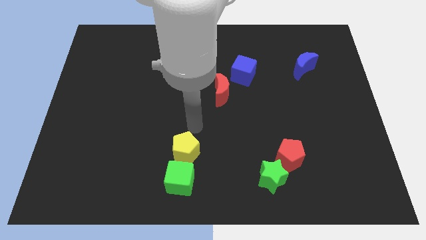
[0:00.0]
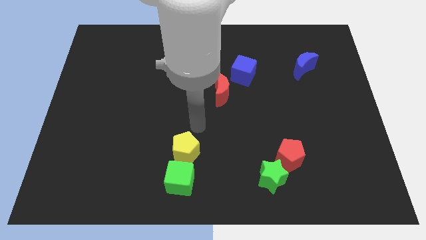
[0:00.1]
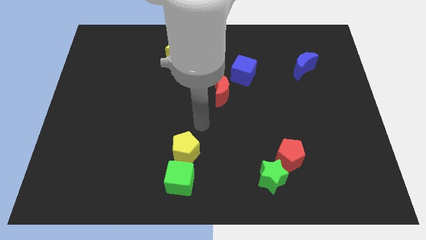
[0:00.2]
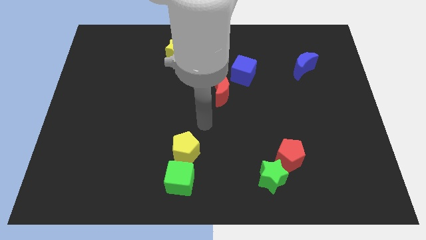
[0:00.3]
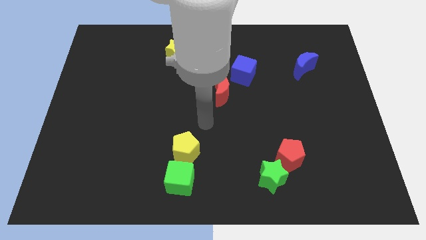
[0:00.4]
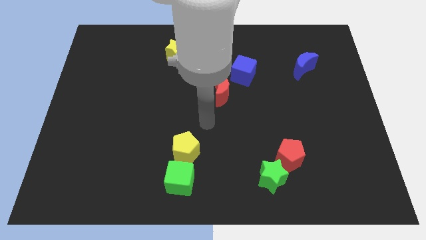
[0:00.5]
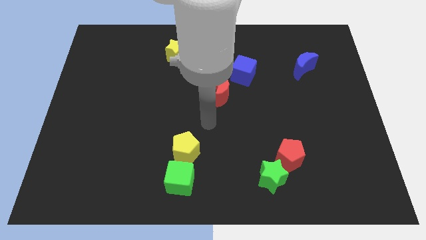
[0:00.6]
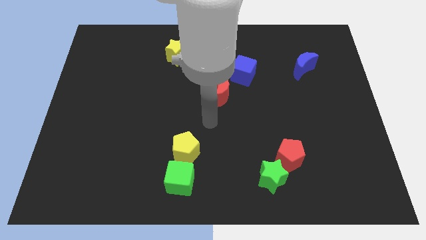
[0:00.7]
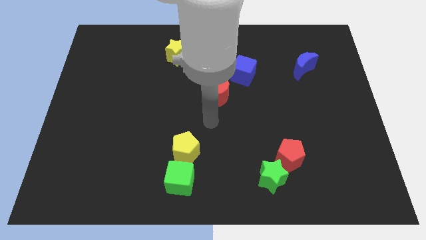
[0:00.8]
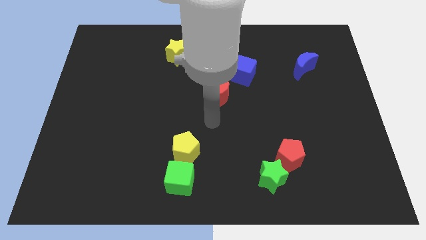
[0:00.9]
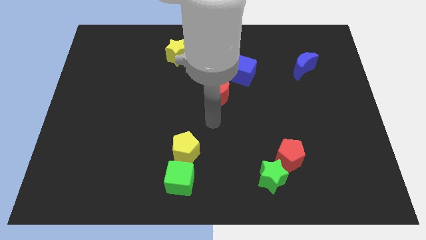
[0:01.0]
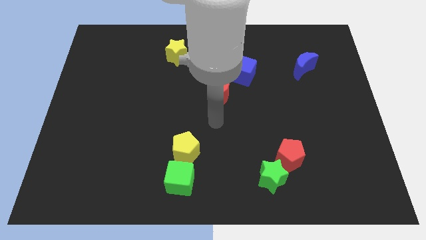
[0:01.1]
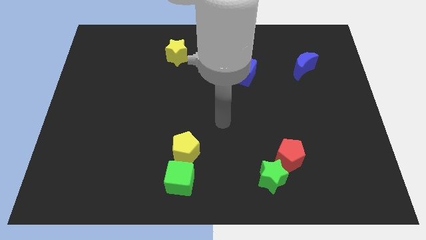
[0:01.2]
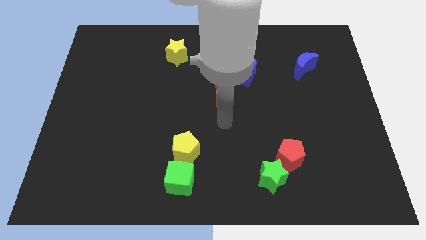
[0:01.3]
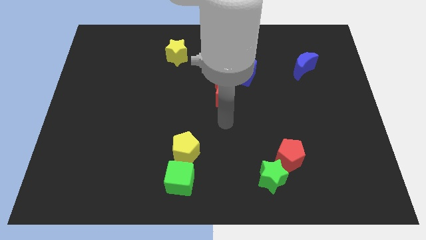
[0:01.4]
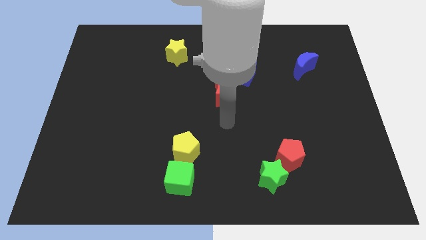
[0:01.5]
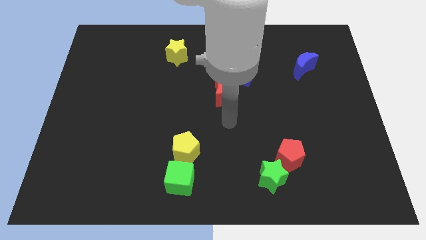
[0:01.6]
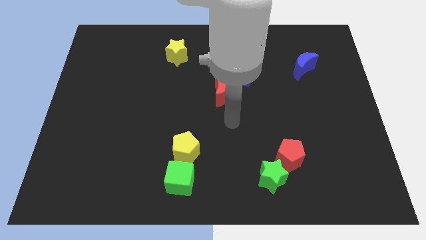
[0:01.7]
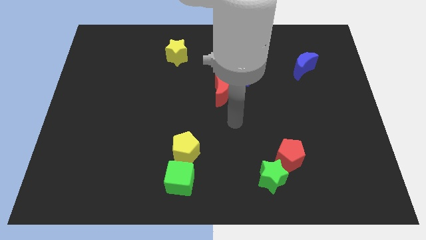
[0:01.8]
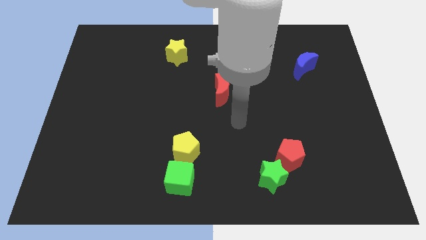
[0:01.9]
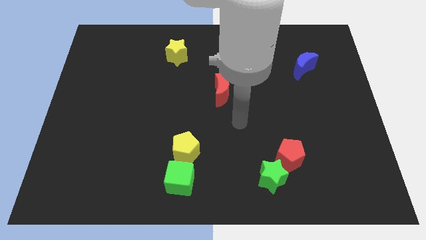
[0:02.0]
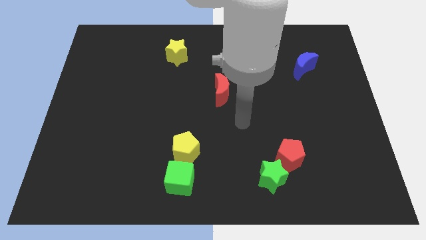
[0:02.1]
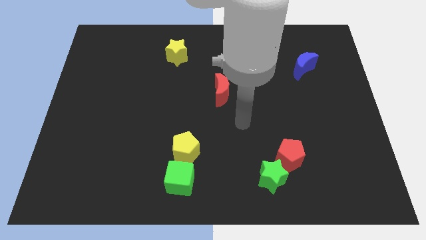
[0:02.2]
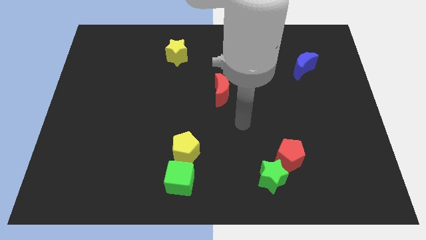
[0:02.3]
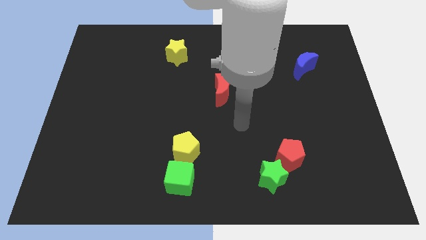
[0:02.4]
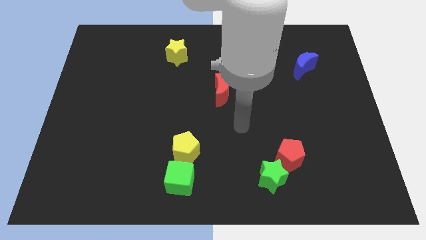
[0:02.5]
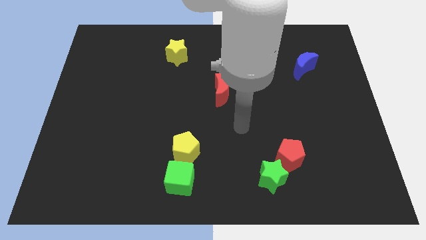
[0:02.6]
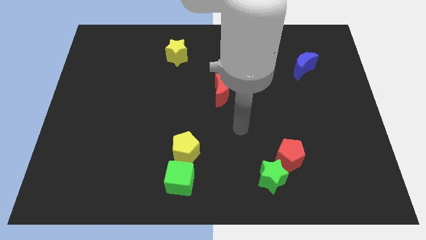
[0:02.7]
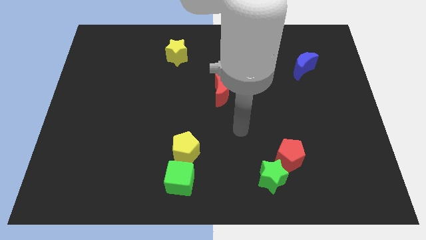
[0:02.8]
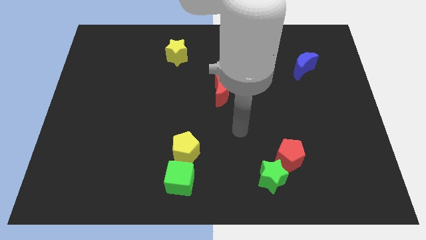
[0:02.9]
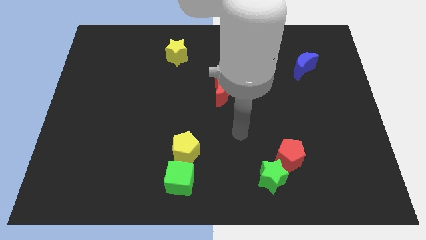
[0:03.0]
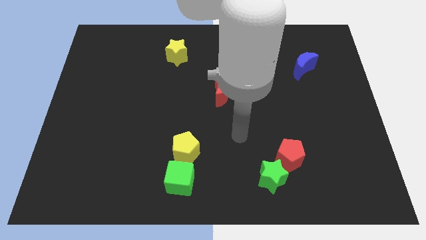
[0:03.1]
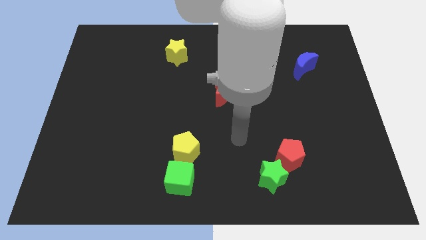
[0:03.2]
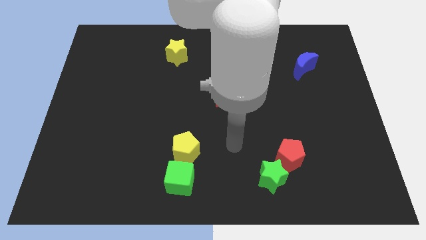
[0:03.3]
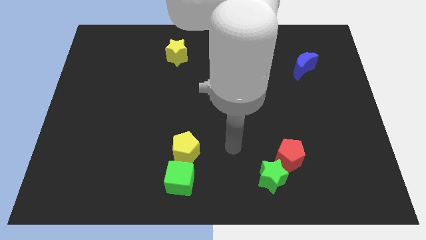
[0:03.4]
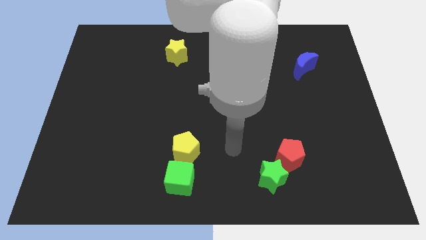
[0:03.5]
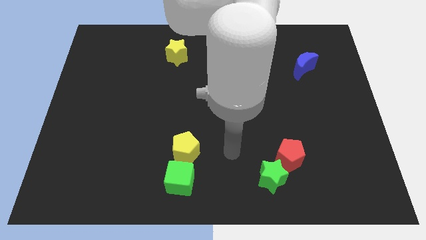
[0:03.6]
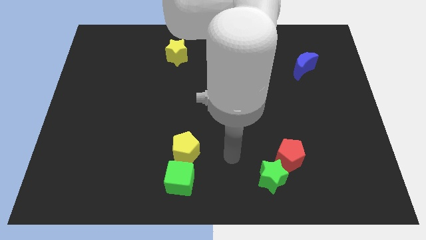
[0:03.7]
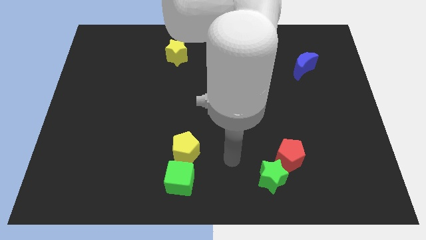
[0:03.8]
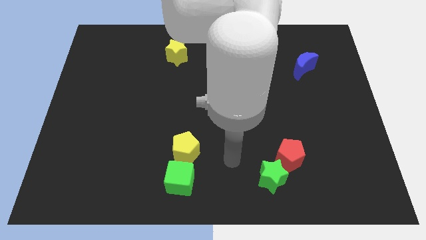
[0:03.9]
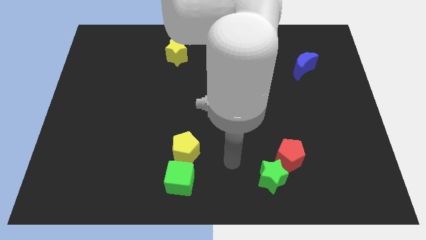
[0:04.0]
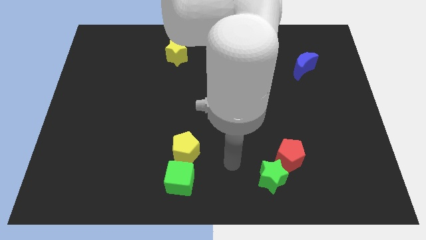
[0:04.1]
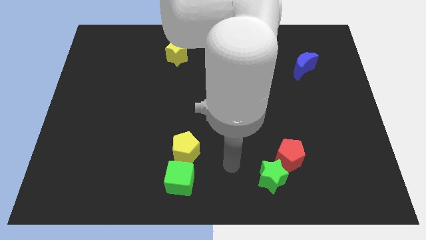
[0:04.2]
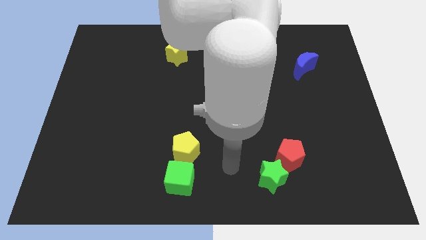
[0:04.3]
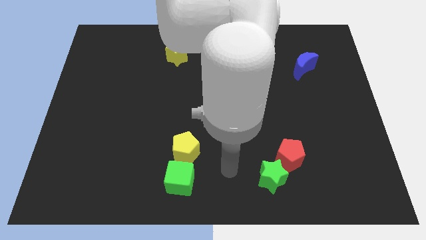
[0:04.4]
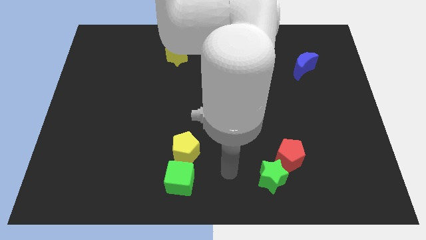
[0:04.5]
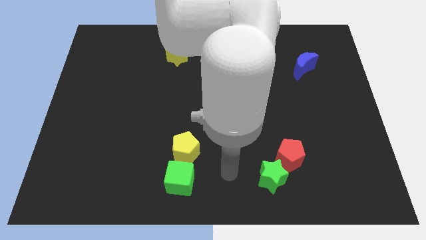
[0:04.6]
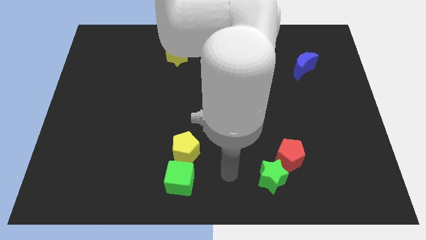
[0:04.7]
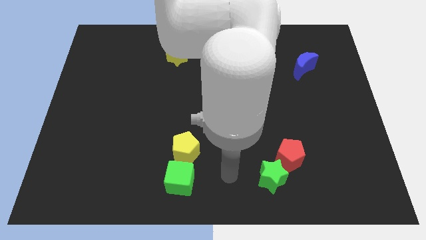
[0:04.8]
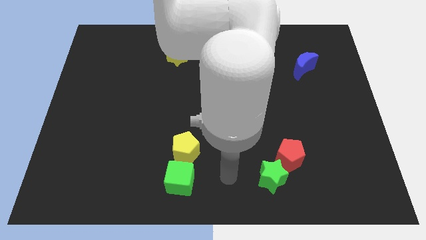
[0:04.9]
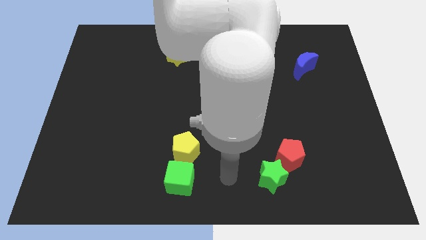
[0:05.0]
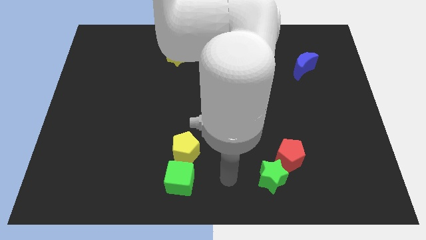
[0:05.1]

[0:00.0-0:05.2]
point your arm in between the green blocks

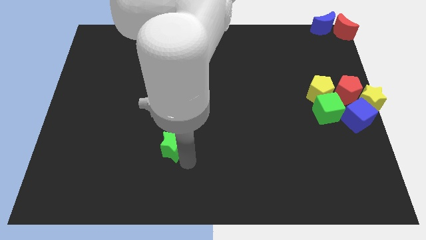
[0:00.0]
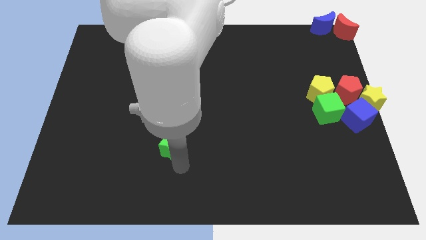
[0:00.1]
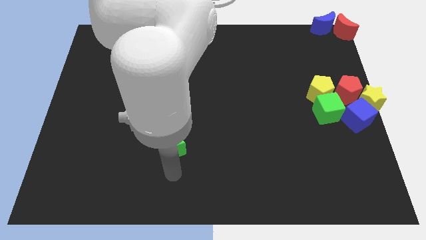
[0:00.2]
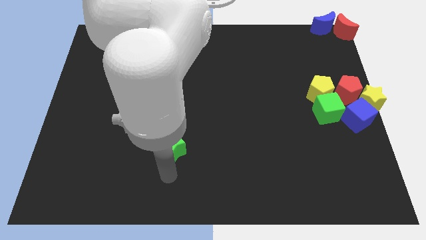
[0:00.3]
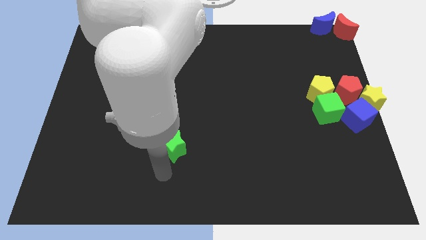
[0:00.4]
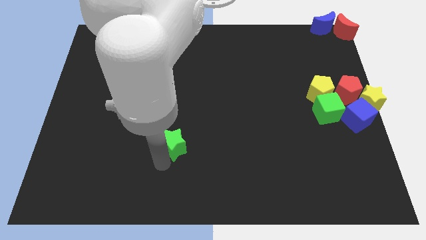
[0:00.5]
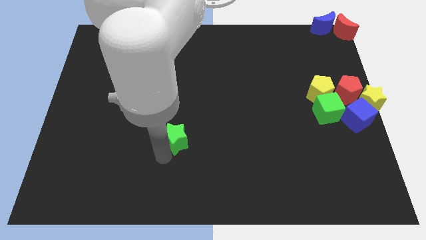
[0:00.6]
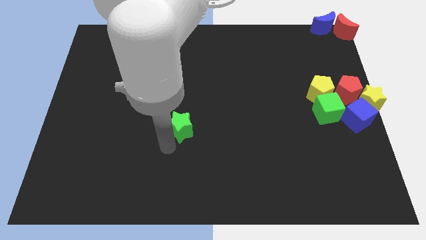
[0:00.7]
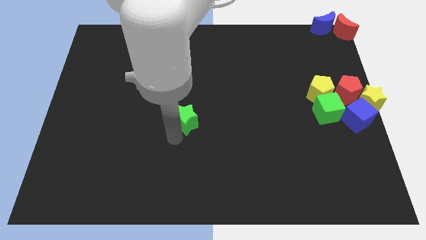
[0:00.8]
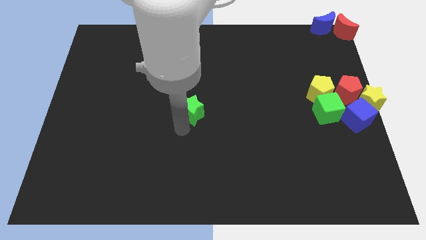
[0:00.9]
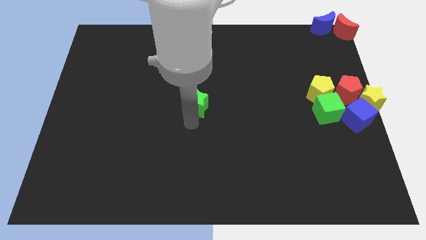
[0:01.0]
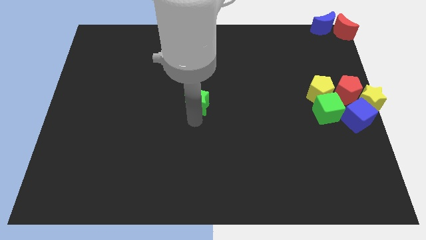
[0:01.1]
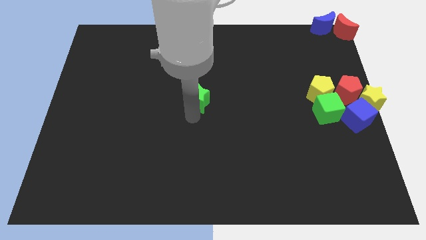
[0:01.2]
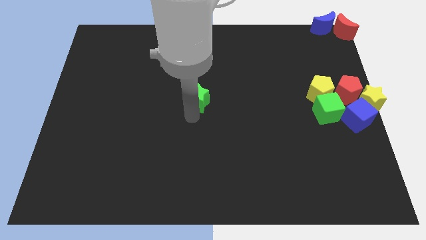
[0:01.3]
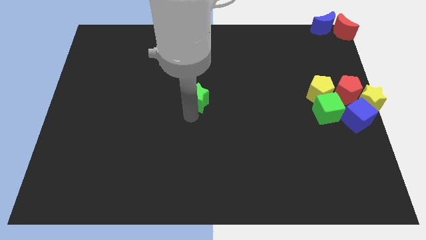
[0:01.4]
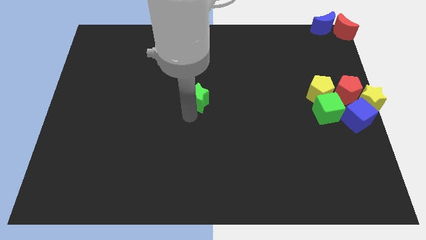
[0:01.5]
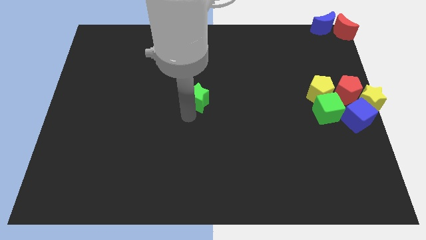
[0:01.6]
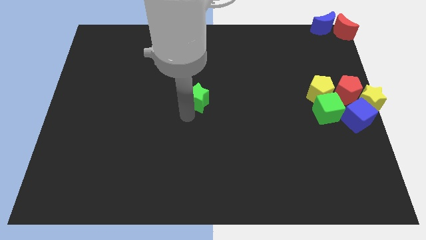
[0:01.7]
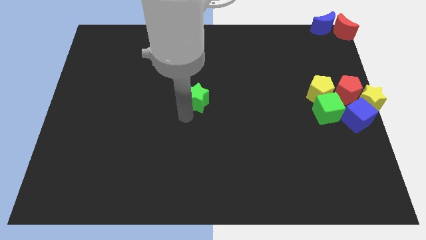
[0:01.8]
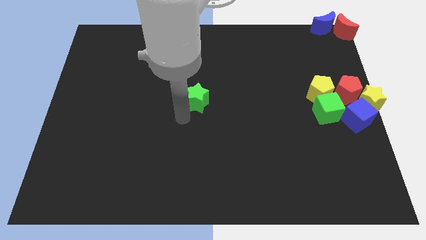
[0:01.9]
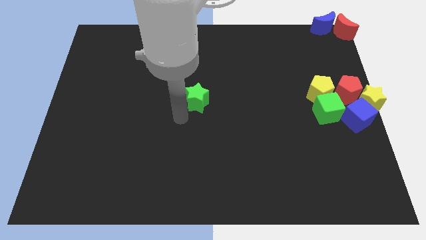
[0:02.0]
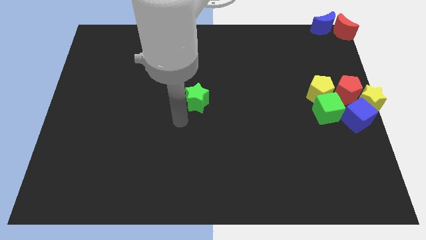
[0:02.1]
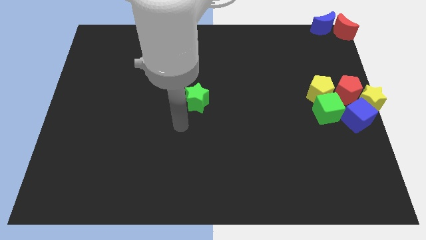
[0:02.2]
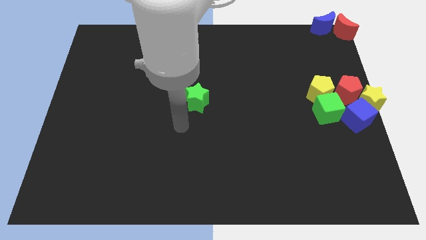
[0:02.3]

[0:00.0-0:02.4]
move the green star towards the top side

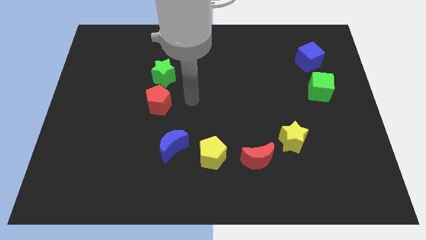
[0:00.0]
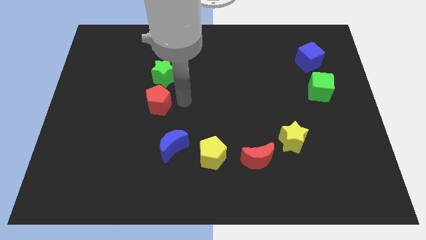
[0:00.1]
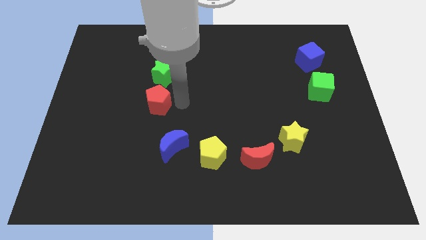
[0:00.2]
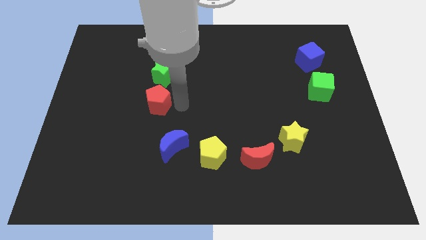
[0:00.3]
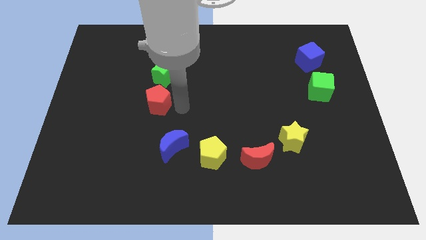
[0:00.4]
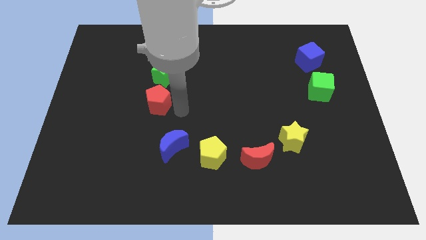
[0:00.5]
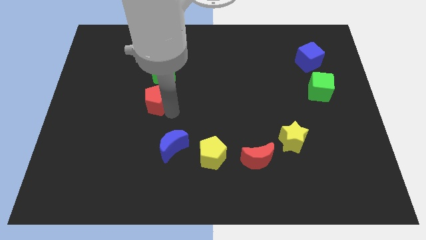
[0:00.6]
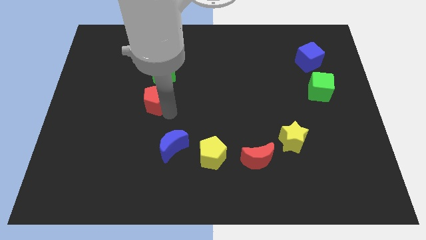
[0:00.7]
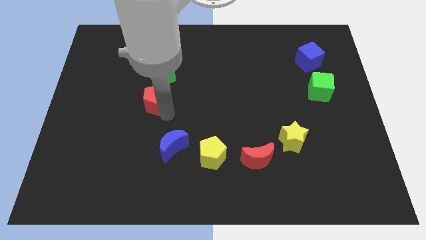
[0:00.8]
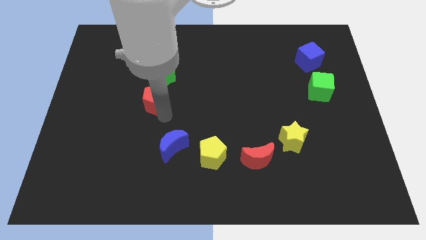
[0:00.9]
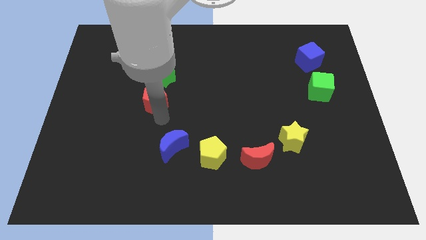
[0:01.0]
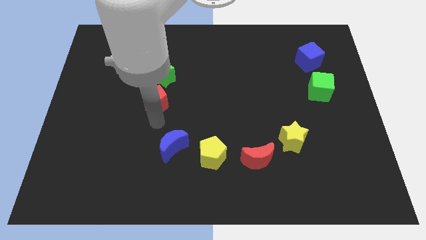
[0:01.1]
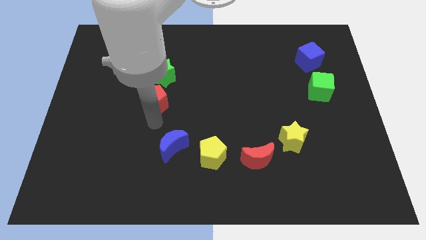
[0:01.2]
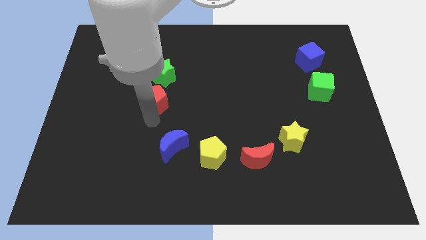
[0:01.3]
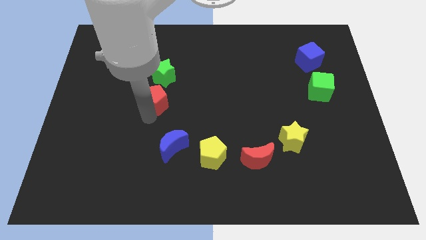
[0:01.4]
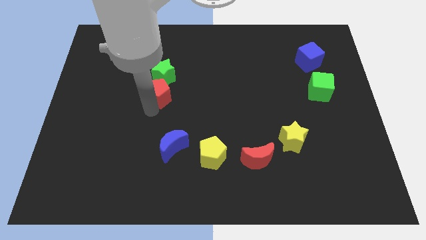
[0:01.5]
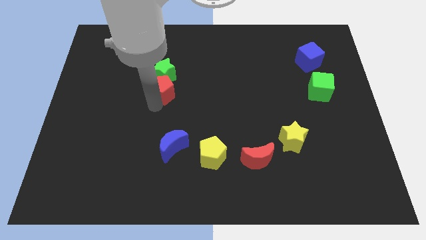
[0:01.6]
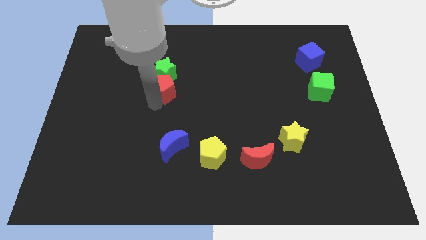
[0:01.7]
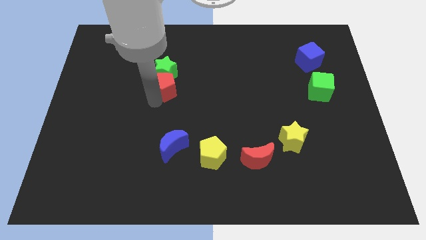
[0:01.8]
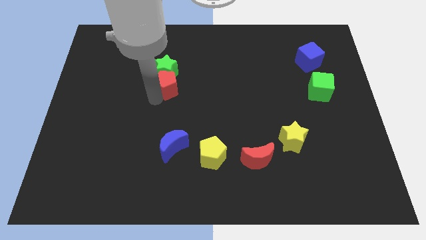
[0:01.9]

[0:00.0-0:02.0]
move the red pentagon into the green star
